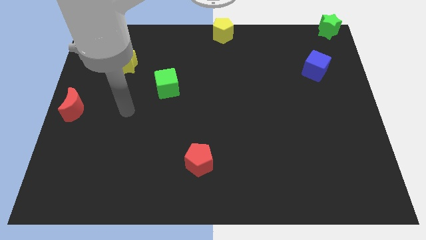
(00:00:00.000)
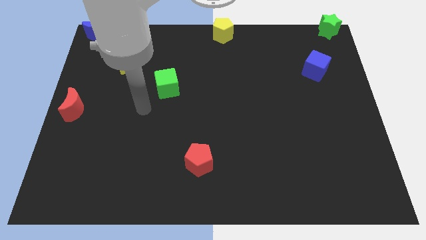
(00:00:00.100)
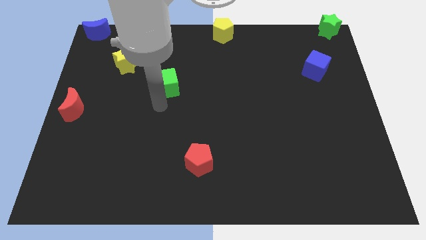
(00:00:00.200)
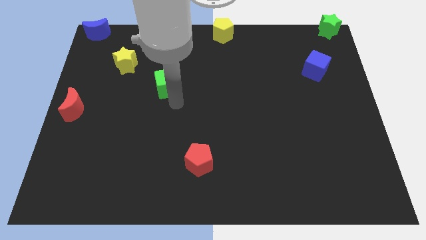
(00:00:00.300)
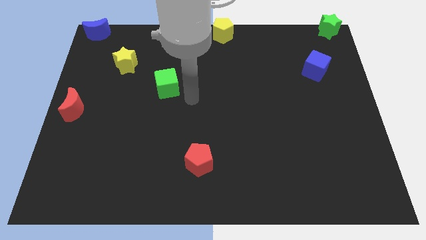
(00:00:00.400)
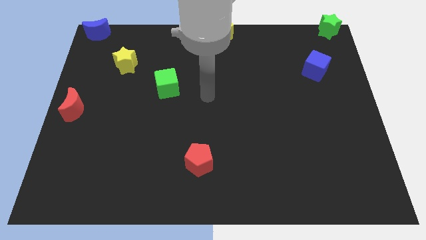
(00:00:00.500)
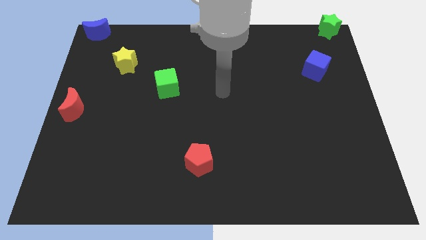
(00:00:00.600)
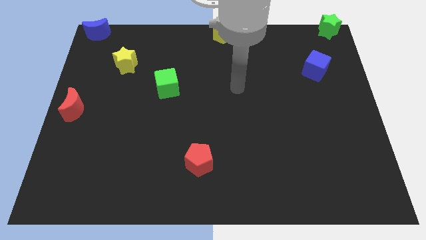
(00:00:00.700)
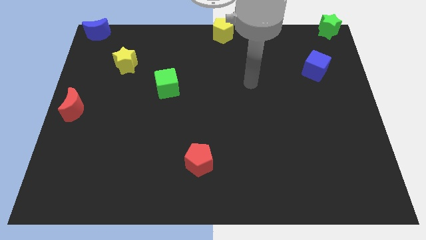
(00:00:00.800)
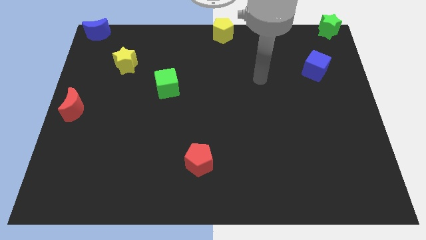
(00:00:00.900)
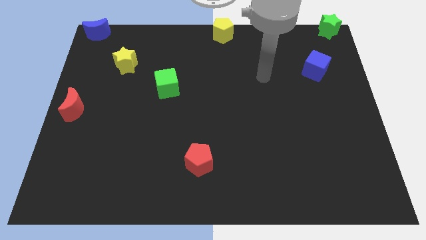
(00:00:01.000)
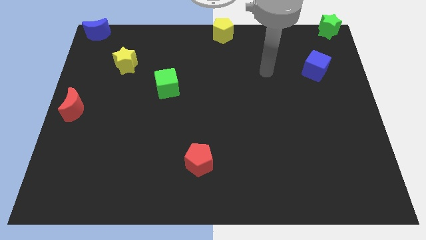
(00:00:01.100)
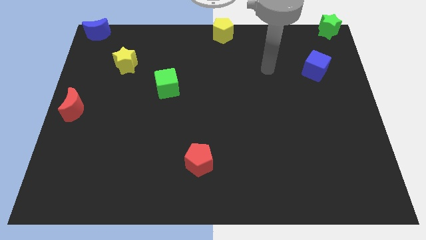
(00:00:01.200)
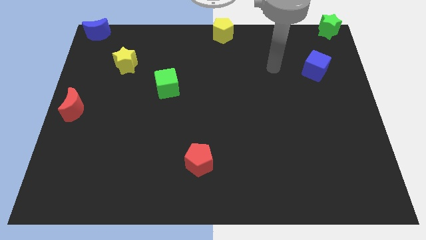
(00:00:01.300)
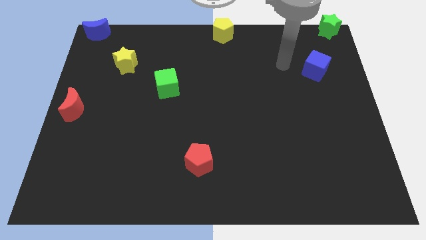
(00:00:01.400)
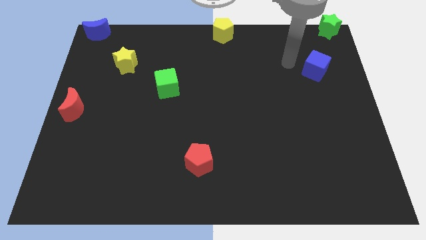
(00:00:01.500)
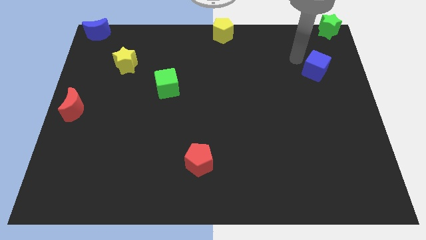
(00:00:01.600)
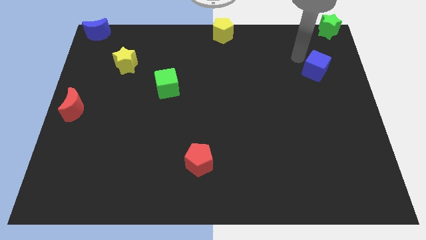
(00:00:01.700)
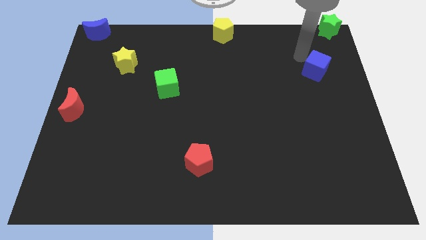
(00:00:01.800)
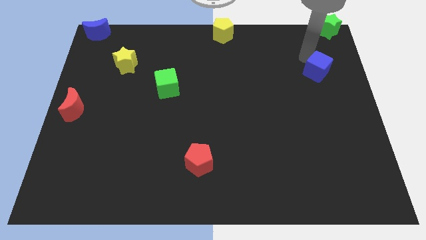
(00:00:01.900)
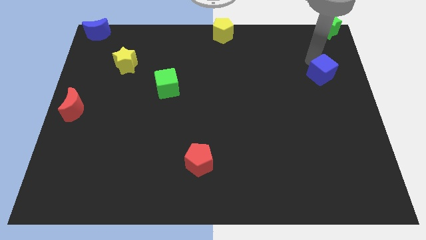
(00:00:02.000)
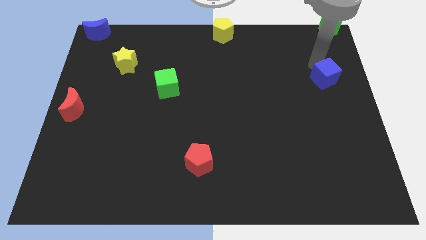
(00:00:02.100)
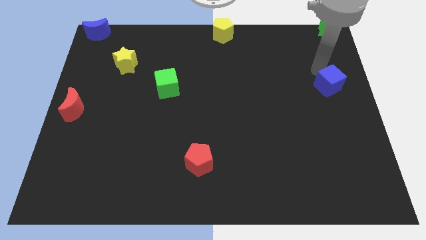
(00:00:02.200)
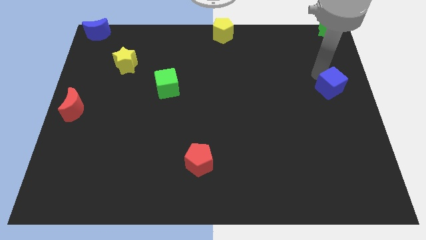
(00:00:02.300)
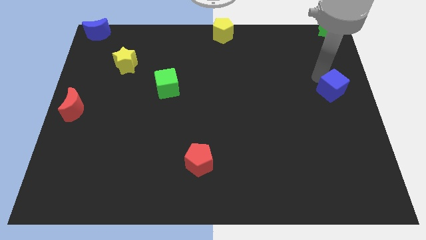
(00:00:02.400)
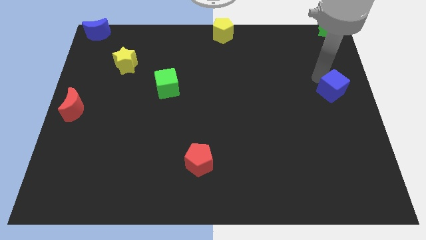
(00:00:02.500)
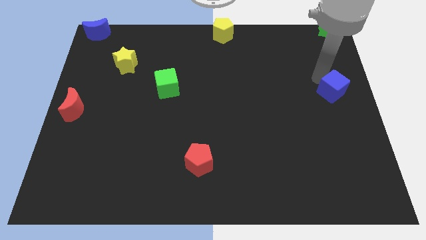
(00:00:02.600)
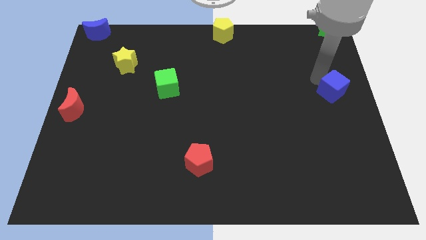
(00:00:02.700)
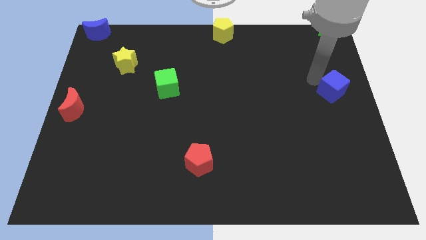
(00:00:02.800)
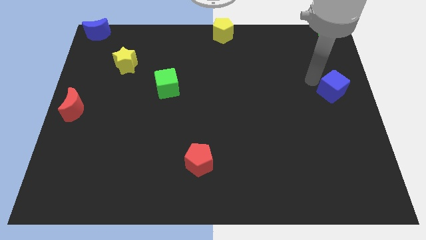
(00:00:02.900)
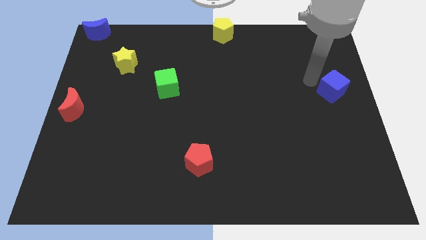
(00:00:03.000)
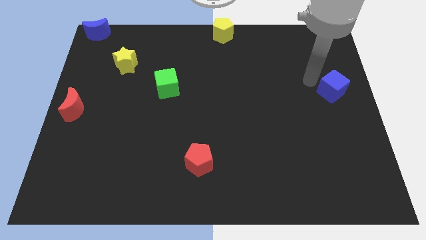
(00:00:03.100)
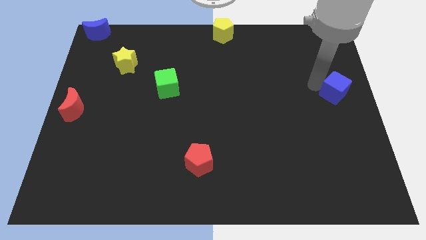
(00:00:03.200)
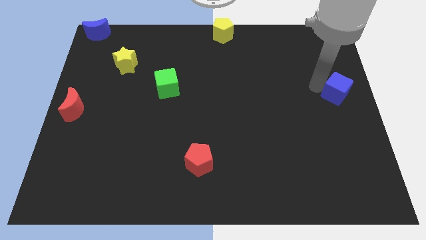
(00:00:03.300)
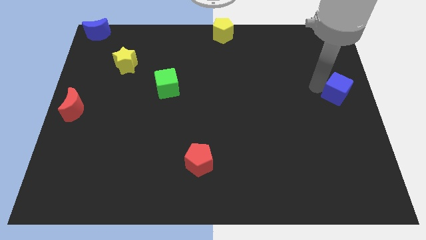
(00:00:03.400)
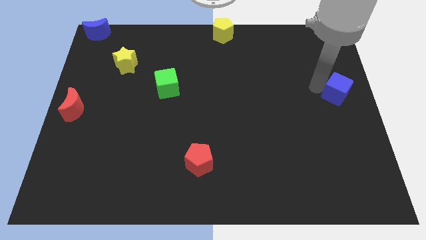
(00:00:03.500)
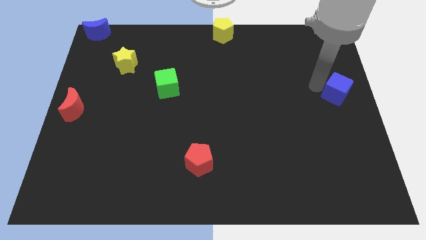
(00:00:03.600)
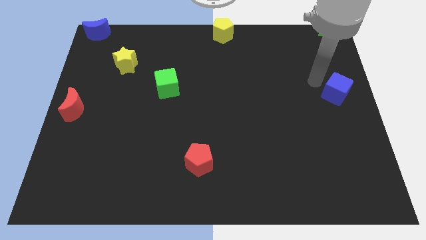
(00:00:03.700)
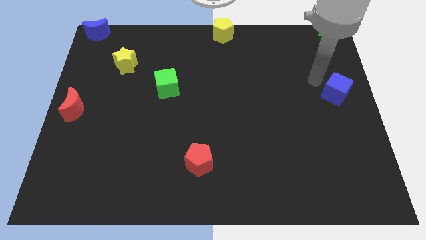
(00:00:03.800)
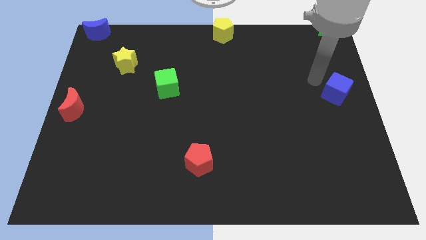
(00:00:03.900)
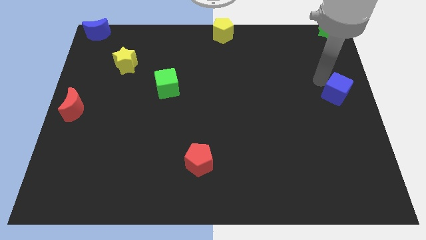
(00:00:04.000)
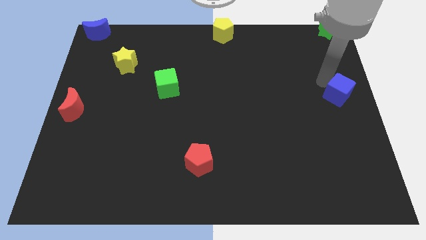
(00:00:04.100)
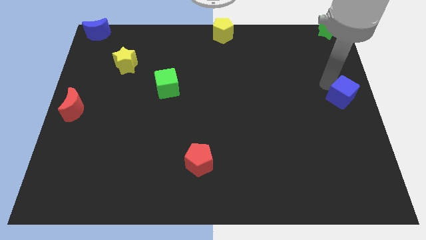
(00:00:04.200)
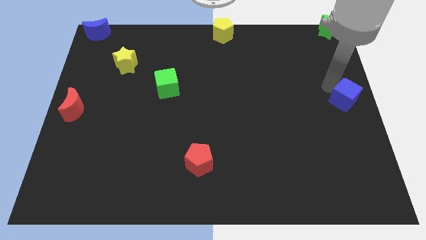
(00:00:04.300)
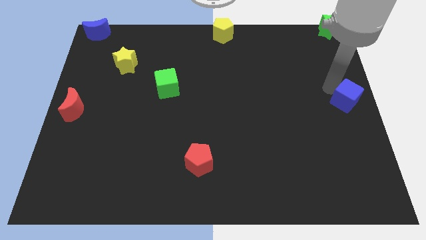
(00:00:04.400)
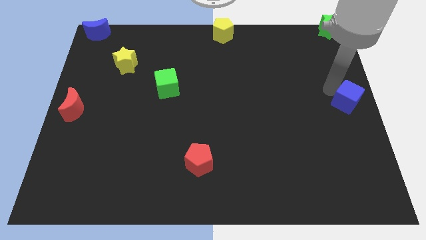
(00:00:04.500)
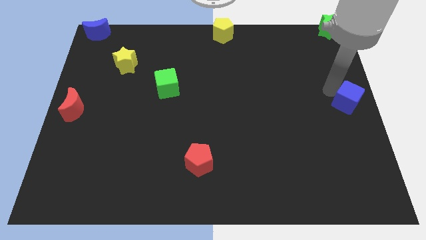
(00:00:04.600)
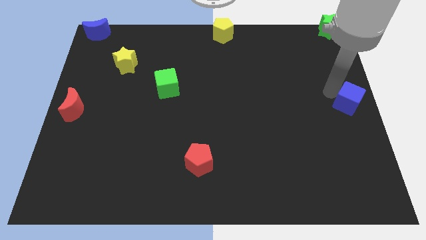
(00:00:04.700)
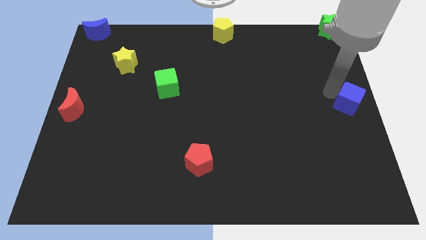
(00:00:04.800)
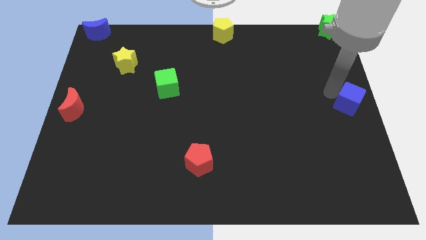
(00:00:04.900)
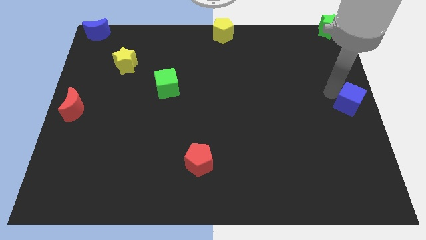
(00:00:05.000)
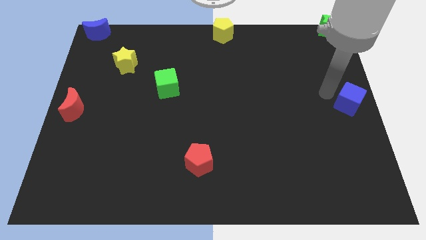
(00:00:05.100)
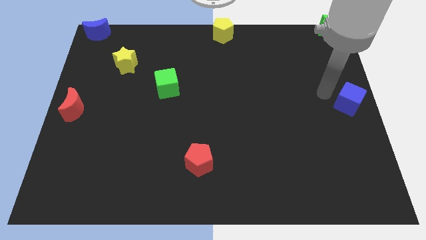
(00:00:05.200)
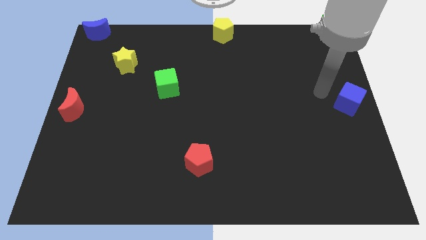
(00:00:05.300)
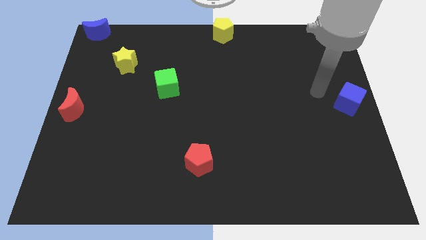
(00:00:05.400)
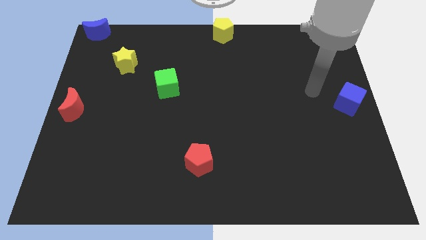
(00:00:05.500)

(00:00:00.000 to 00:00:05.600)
push the blue cube towards the right center

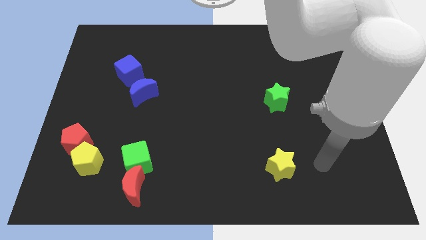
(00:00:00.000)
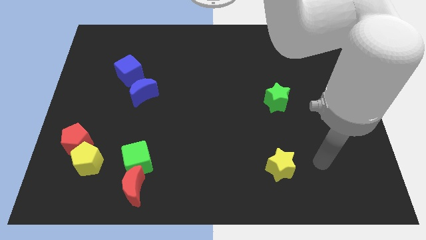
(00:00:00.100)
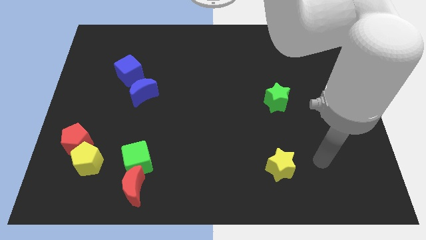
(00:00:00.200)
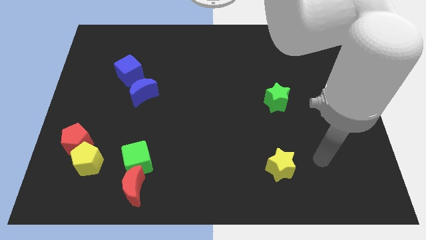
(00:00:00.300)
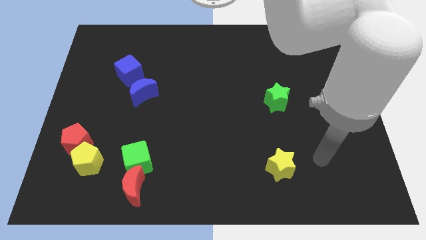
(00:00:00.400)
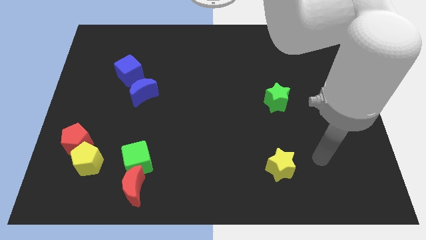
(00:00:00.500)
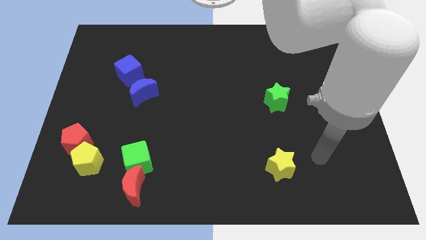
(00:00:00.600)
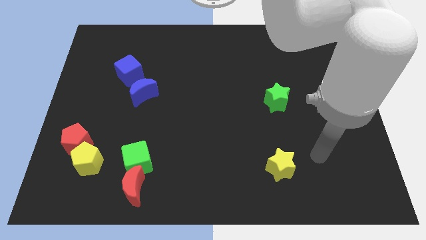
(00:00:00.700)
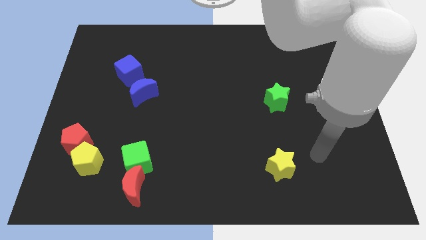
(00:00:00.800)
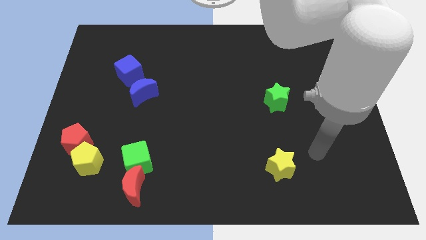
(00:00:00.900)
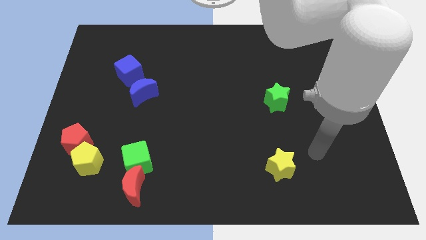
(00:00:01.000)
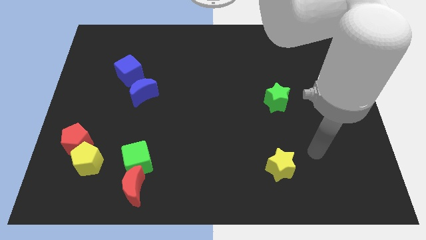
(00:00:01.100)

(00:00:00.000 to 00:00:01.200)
place arm on right side of yellow star

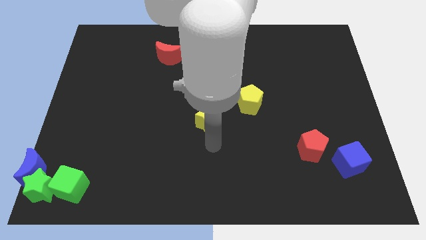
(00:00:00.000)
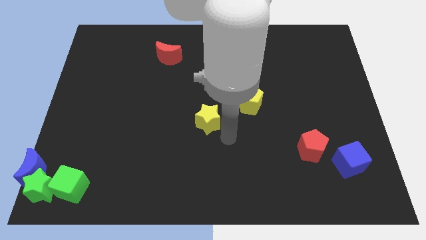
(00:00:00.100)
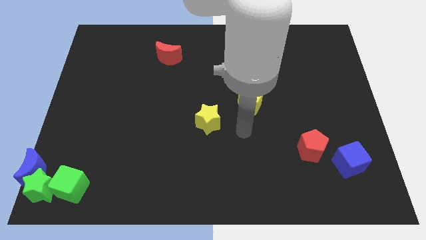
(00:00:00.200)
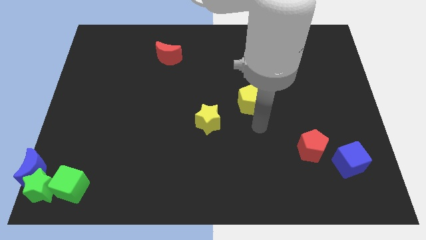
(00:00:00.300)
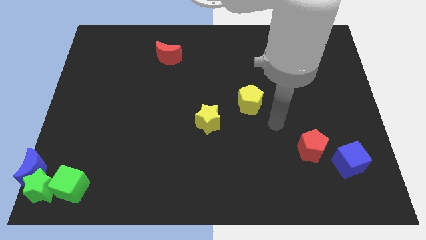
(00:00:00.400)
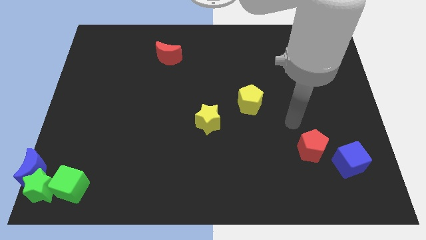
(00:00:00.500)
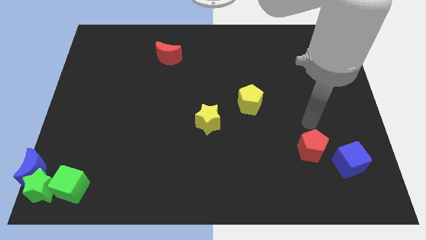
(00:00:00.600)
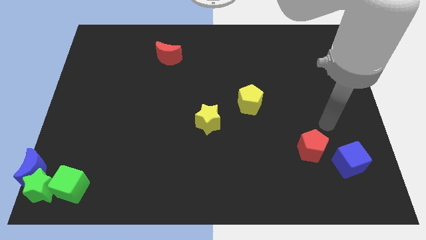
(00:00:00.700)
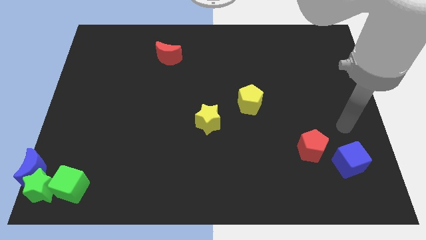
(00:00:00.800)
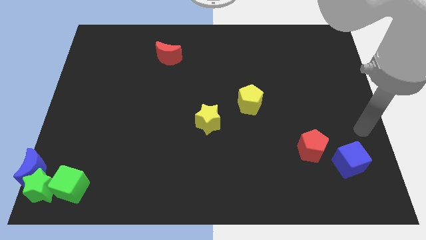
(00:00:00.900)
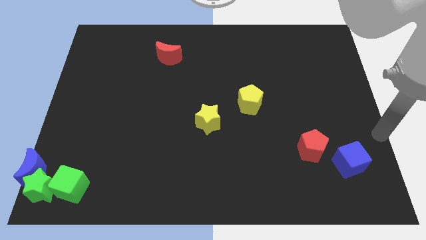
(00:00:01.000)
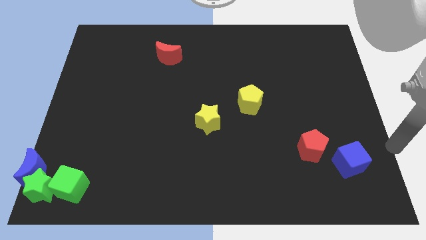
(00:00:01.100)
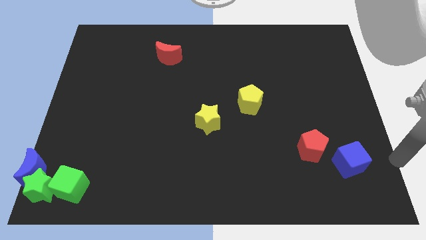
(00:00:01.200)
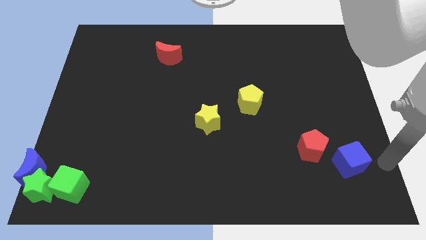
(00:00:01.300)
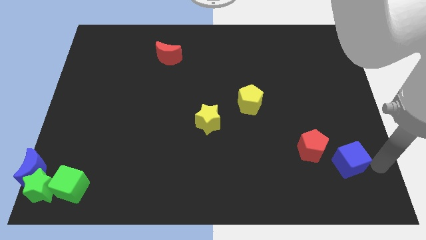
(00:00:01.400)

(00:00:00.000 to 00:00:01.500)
place the arm right to the blue cube

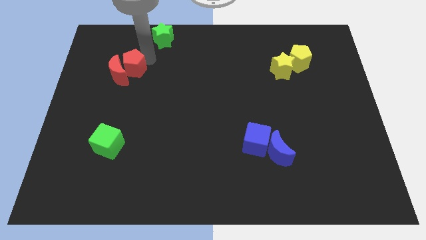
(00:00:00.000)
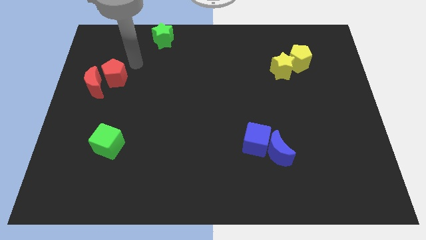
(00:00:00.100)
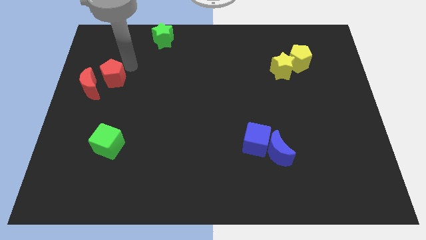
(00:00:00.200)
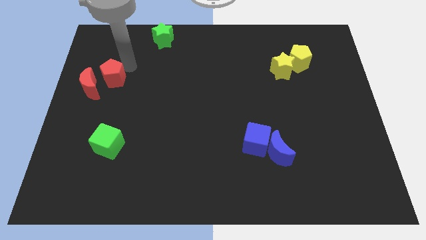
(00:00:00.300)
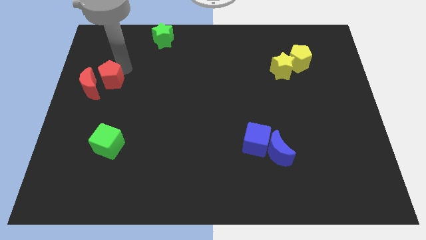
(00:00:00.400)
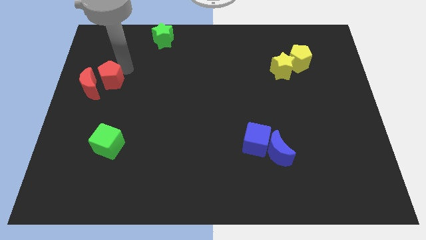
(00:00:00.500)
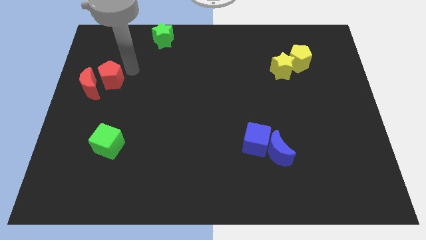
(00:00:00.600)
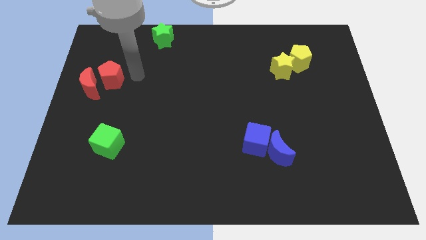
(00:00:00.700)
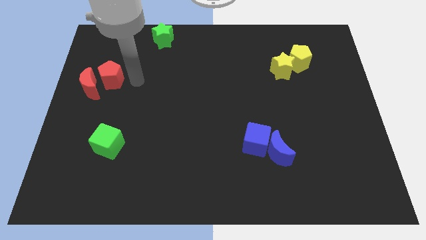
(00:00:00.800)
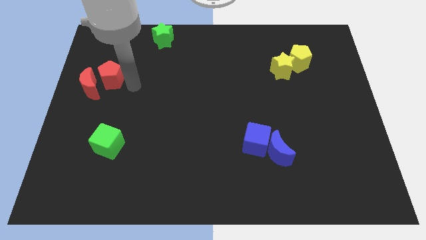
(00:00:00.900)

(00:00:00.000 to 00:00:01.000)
push the red pentagon in red moon
